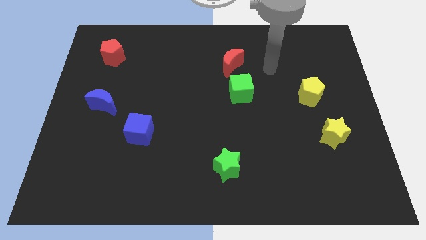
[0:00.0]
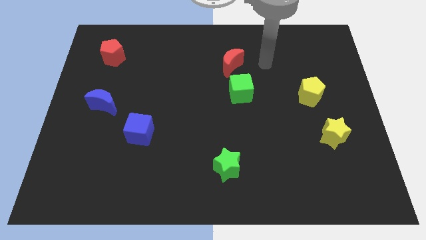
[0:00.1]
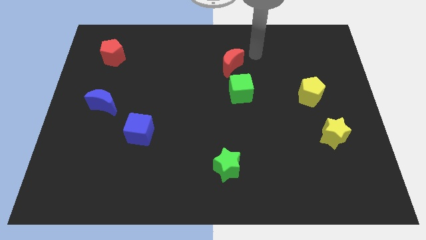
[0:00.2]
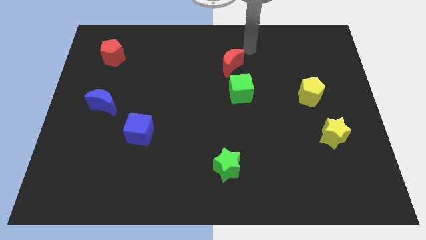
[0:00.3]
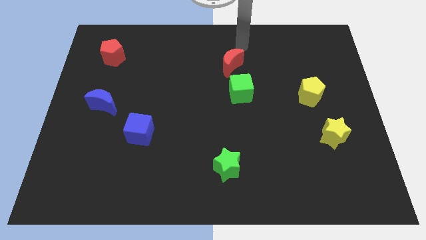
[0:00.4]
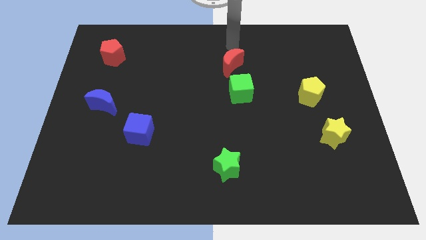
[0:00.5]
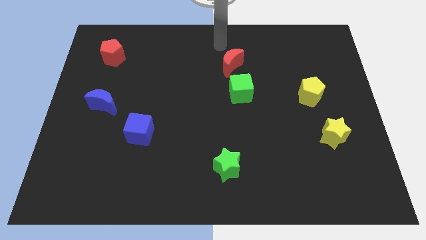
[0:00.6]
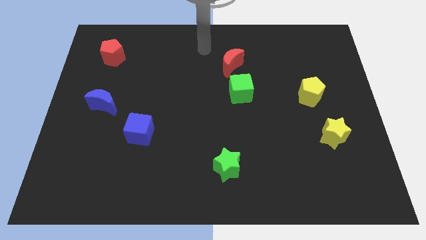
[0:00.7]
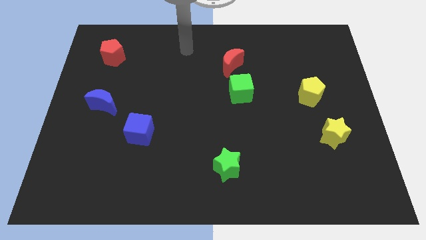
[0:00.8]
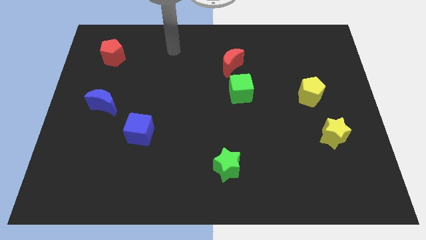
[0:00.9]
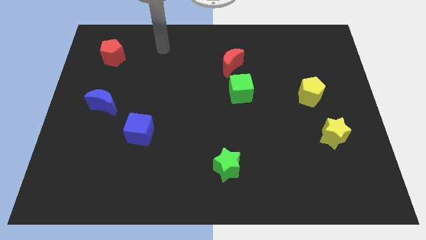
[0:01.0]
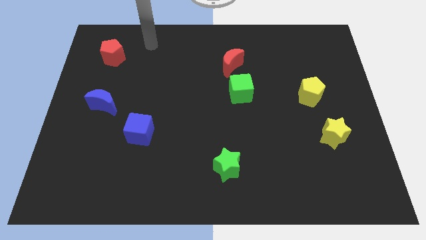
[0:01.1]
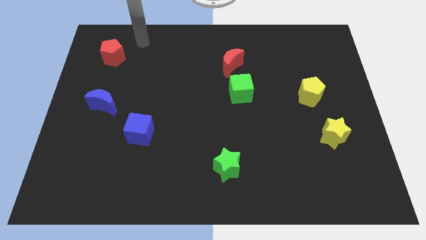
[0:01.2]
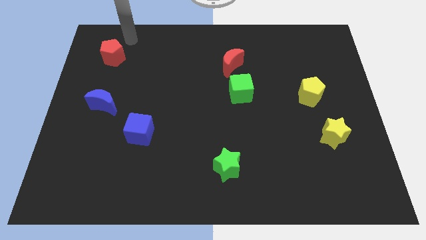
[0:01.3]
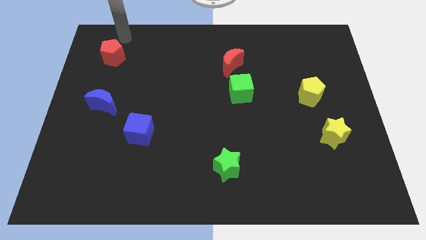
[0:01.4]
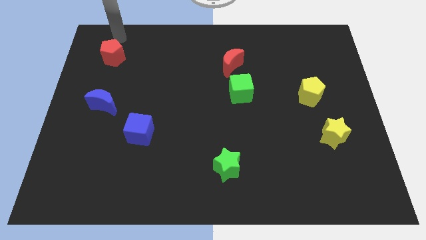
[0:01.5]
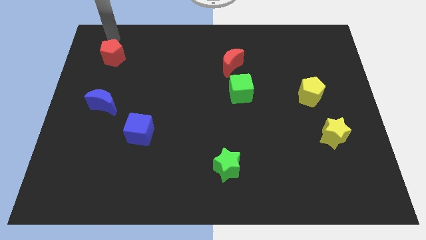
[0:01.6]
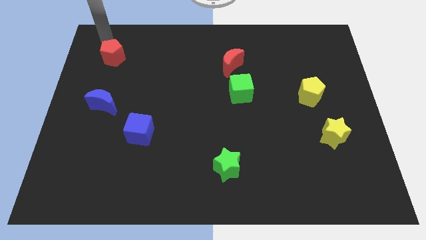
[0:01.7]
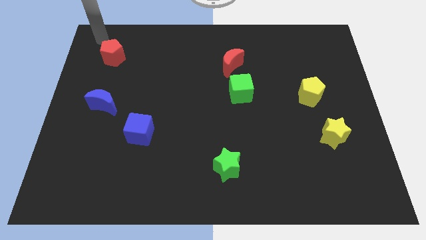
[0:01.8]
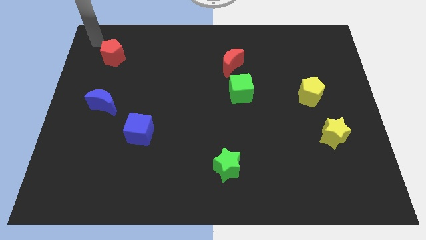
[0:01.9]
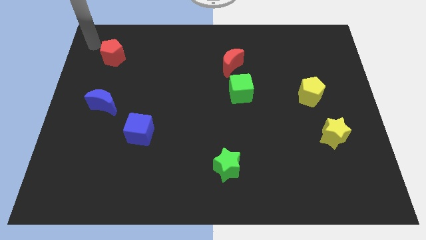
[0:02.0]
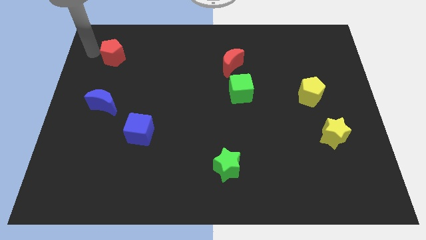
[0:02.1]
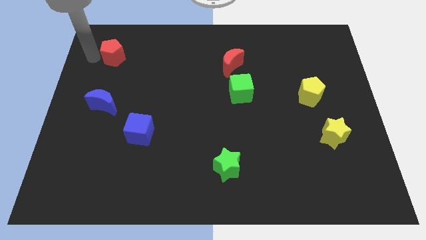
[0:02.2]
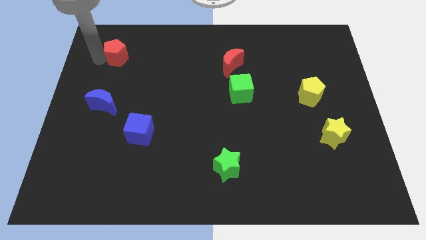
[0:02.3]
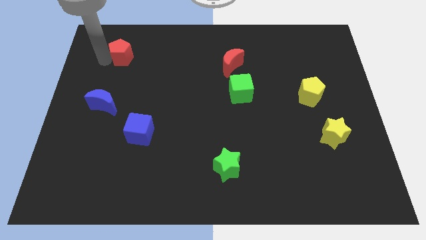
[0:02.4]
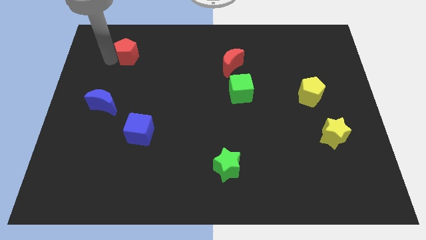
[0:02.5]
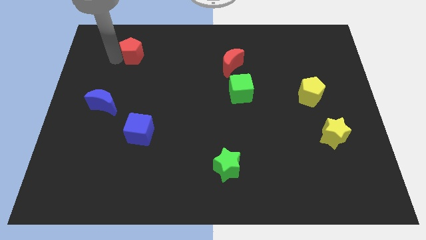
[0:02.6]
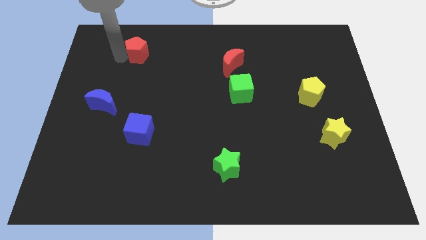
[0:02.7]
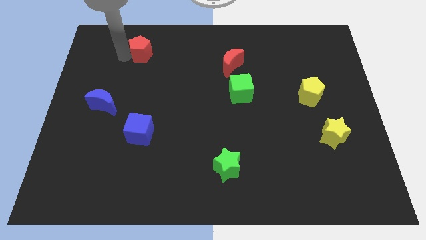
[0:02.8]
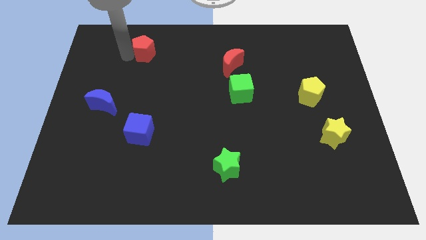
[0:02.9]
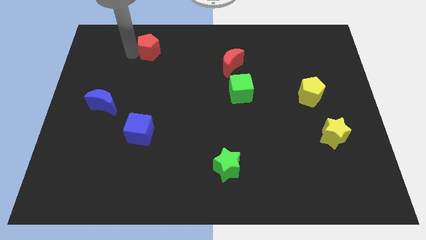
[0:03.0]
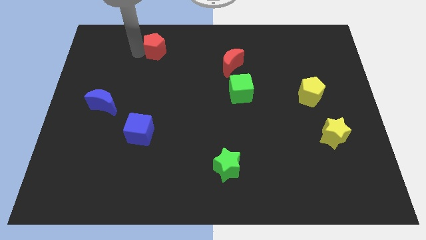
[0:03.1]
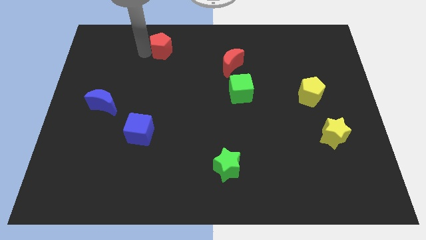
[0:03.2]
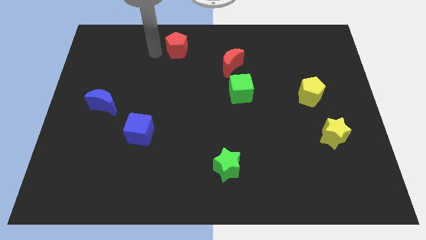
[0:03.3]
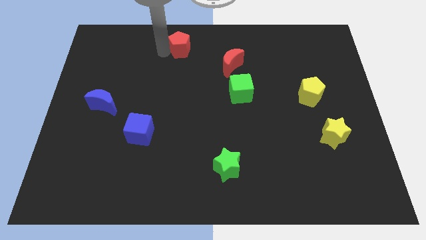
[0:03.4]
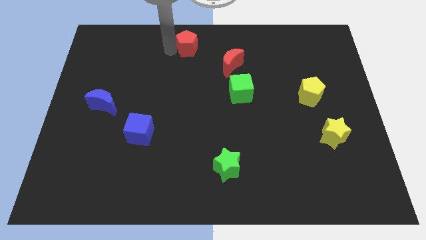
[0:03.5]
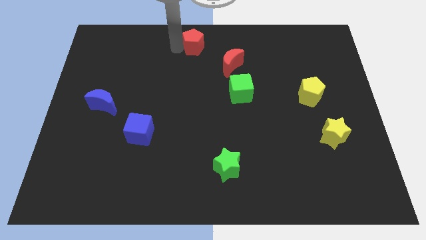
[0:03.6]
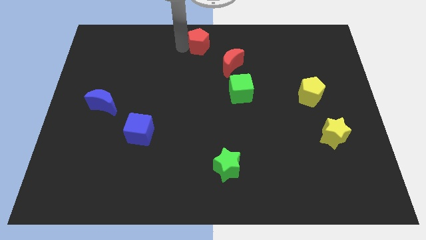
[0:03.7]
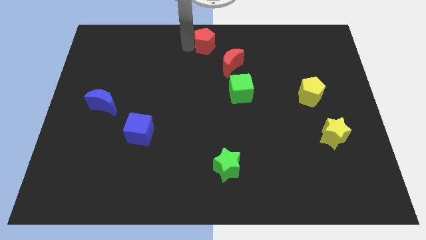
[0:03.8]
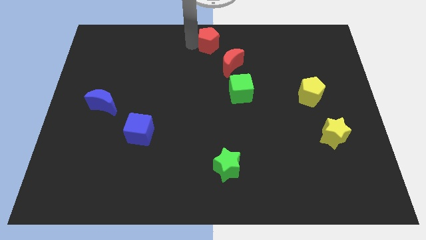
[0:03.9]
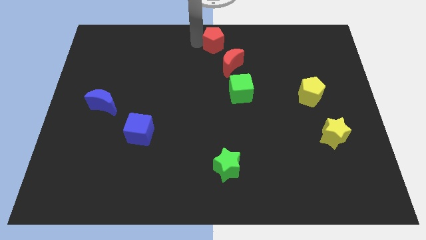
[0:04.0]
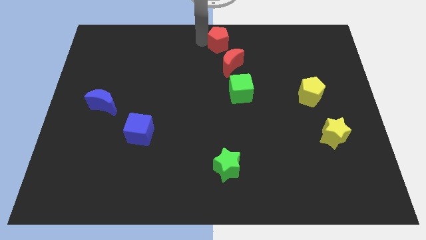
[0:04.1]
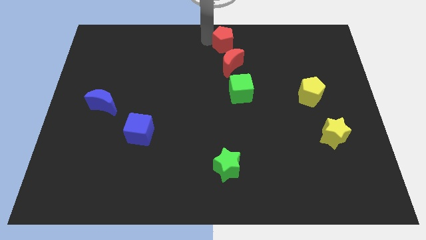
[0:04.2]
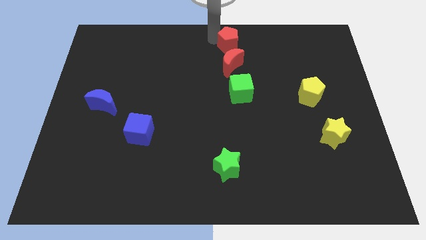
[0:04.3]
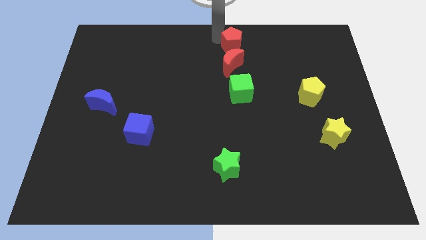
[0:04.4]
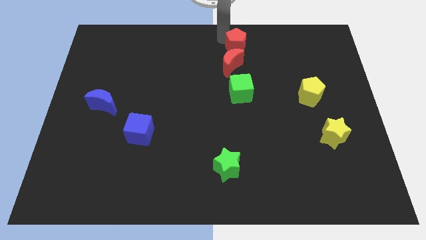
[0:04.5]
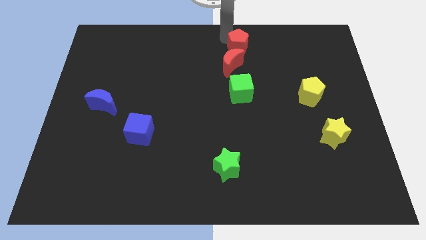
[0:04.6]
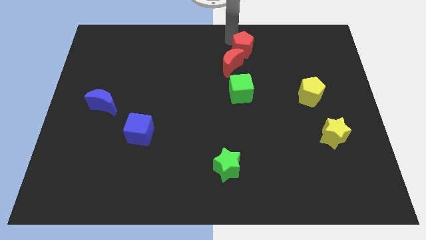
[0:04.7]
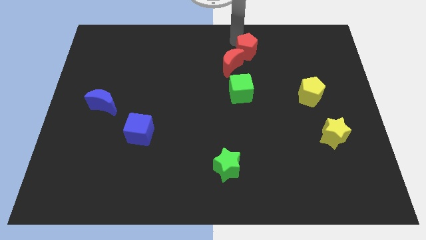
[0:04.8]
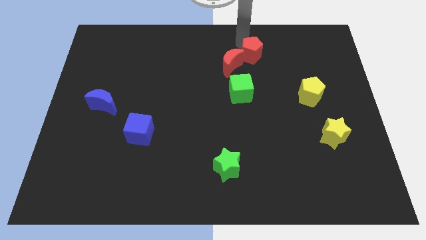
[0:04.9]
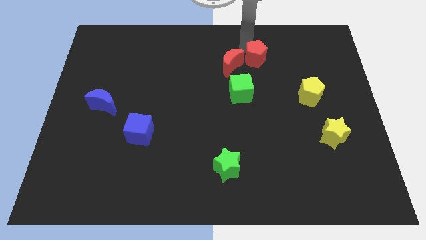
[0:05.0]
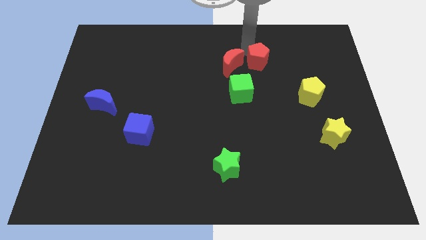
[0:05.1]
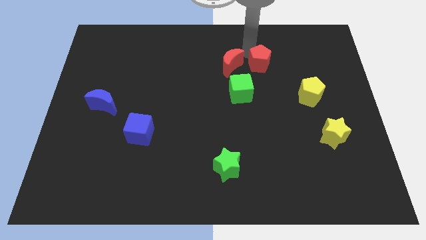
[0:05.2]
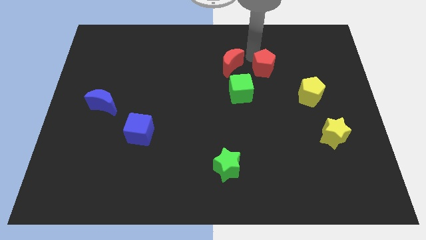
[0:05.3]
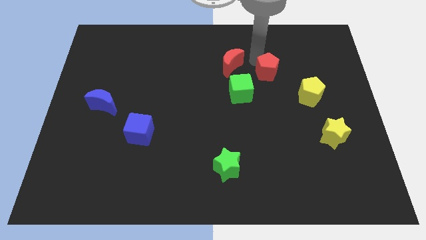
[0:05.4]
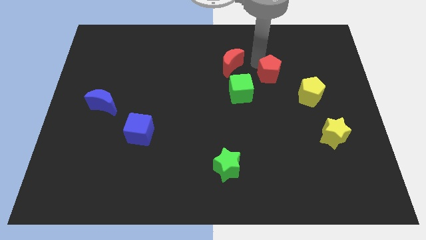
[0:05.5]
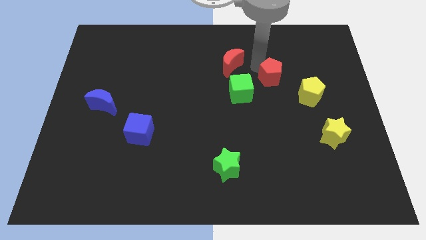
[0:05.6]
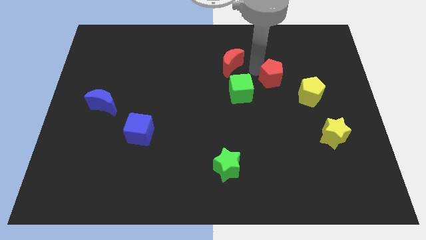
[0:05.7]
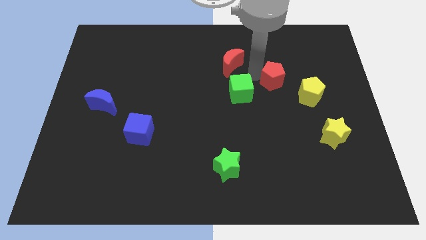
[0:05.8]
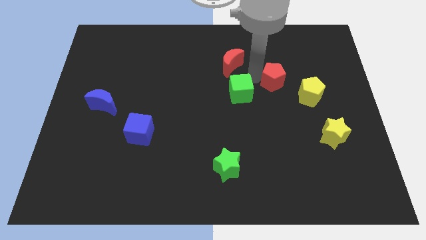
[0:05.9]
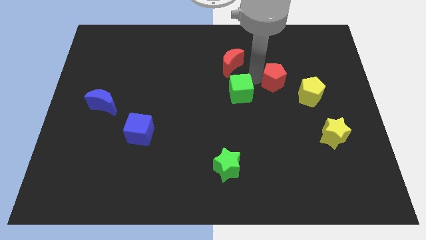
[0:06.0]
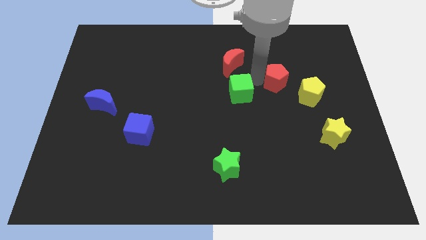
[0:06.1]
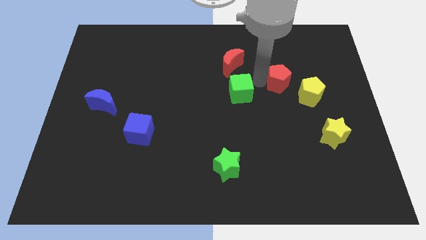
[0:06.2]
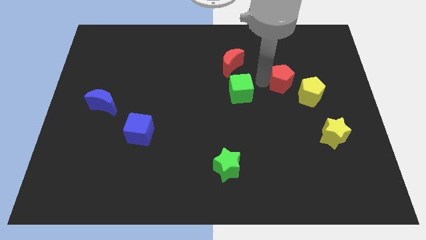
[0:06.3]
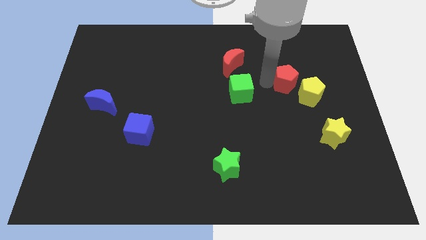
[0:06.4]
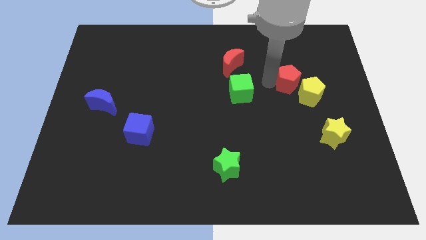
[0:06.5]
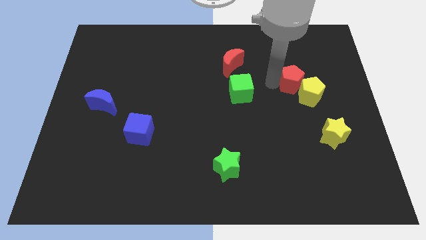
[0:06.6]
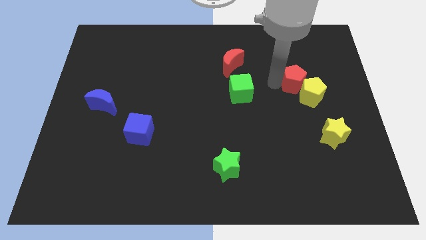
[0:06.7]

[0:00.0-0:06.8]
push the red pentagon next to the yellow pentagon

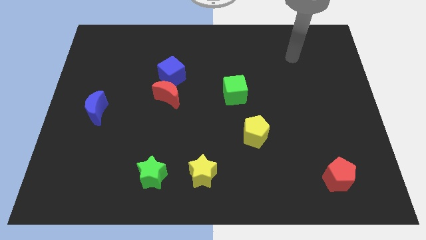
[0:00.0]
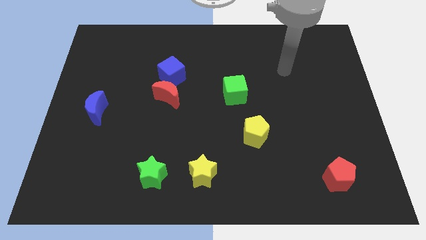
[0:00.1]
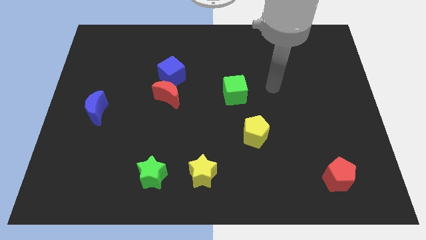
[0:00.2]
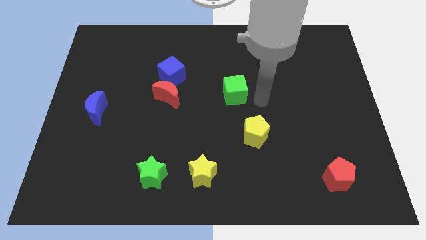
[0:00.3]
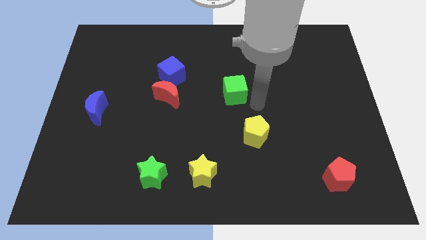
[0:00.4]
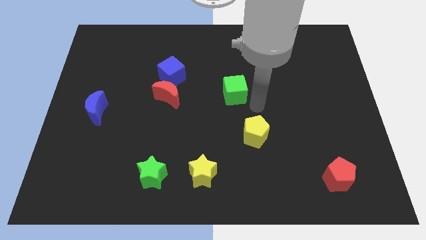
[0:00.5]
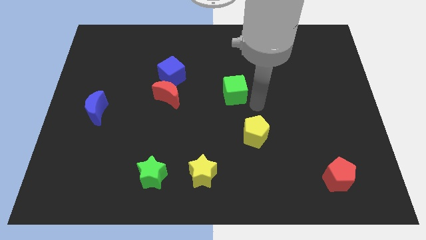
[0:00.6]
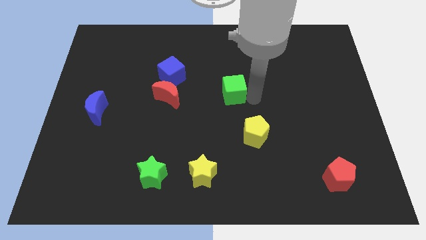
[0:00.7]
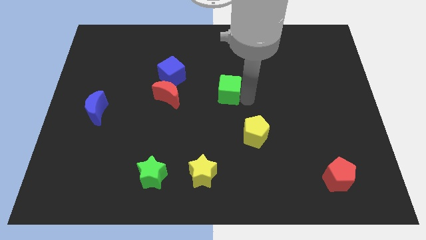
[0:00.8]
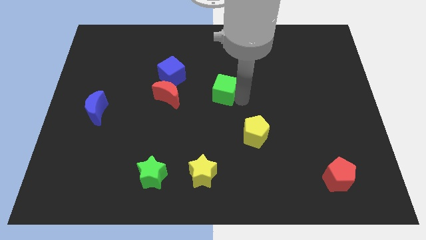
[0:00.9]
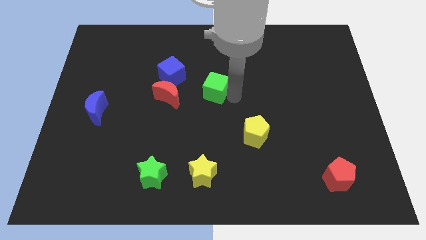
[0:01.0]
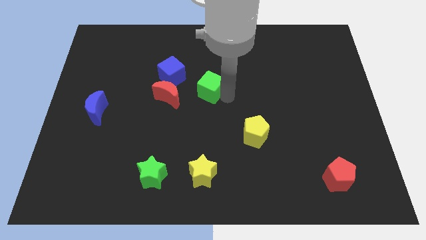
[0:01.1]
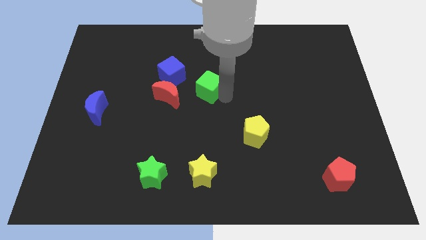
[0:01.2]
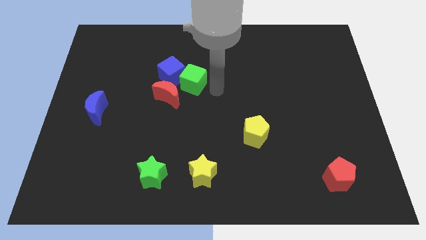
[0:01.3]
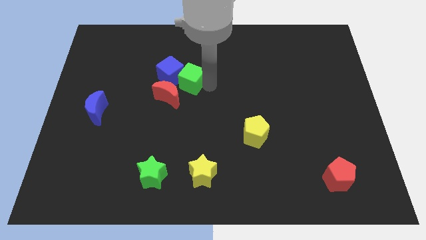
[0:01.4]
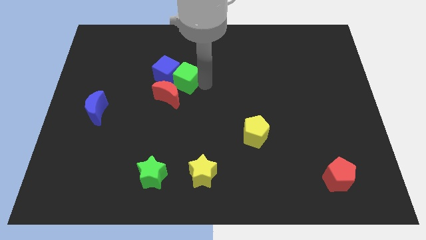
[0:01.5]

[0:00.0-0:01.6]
slide the green cube towards the blue cube
